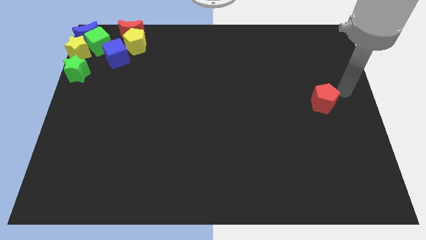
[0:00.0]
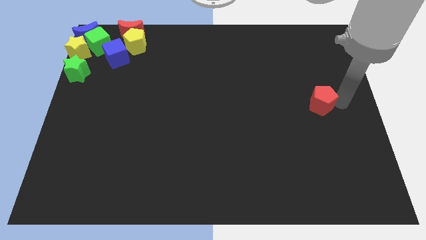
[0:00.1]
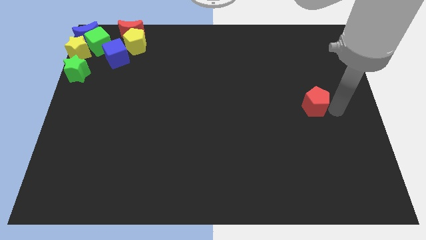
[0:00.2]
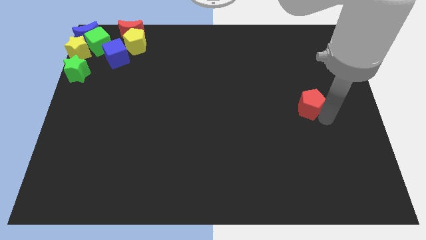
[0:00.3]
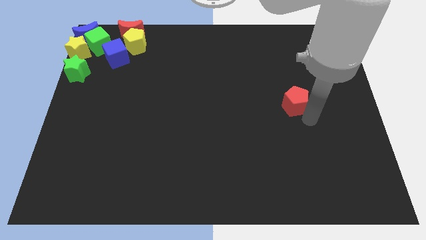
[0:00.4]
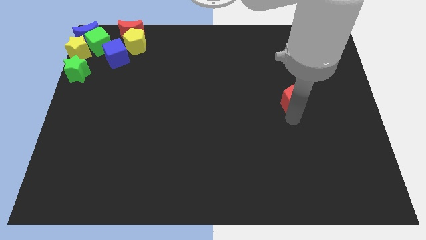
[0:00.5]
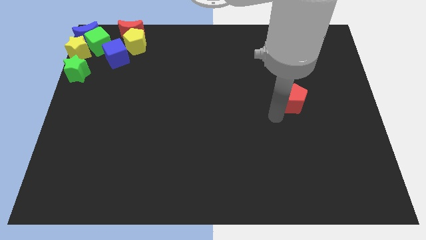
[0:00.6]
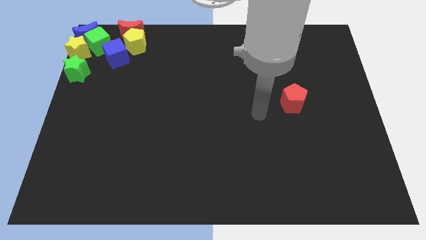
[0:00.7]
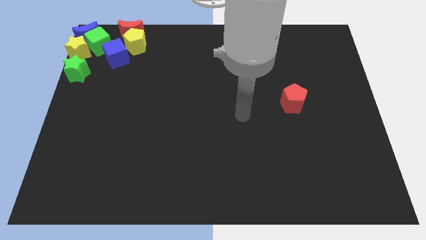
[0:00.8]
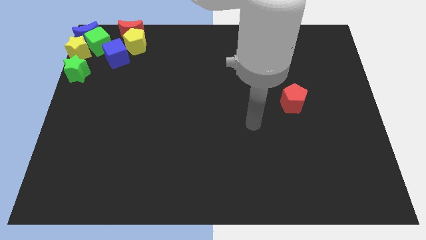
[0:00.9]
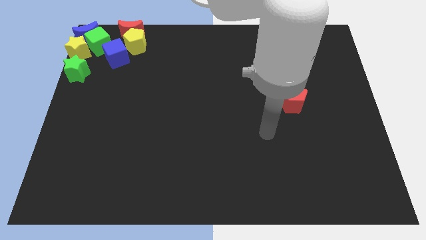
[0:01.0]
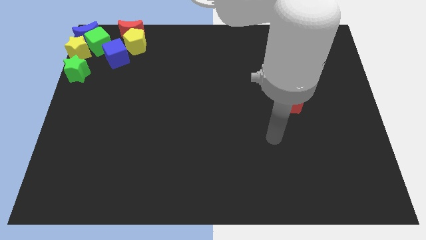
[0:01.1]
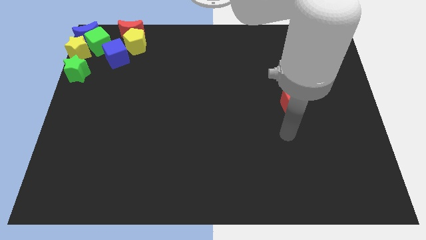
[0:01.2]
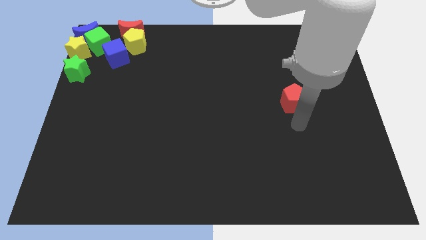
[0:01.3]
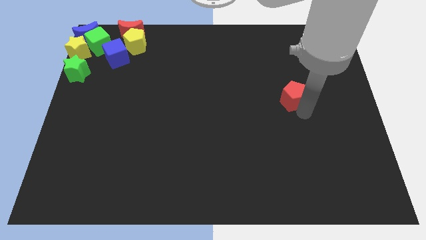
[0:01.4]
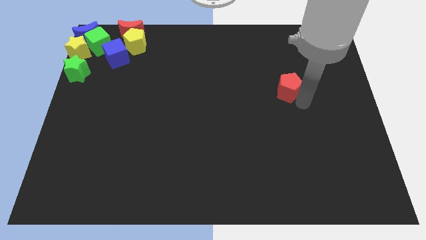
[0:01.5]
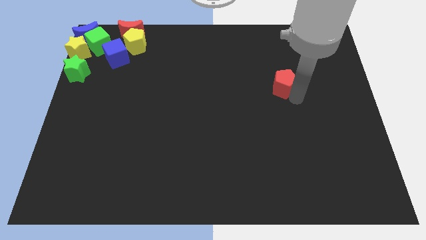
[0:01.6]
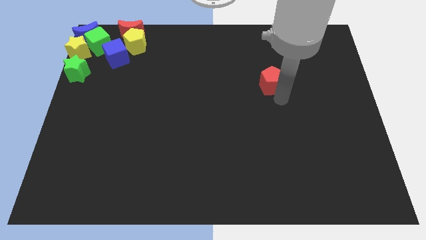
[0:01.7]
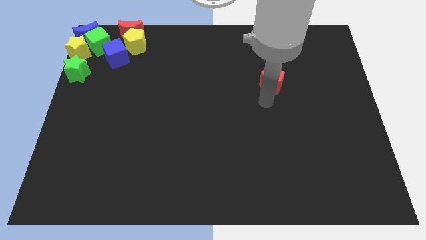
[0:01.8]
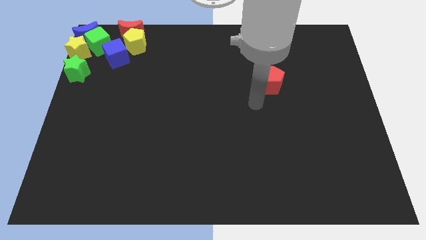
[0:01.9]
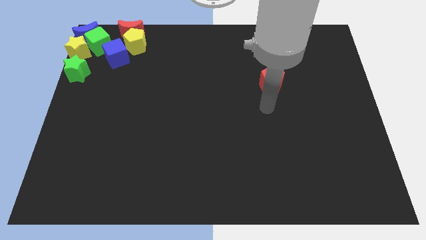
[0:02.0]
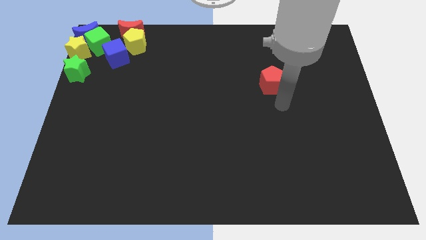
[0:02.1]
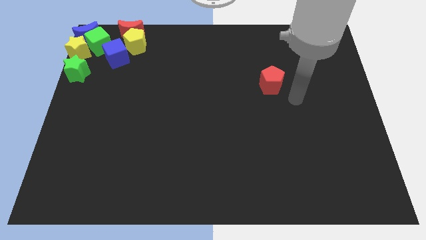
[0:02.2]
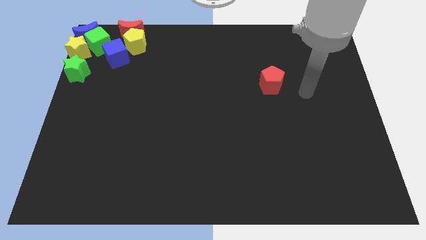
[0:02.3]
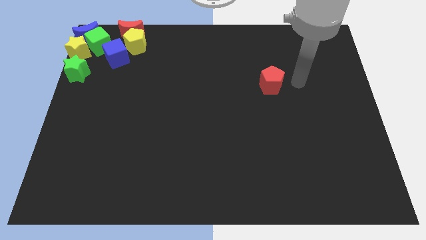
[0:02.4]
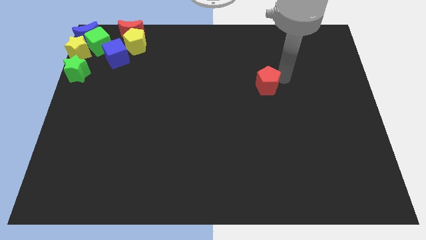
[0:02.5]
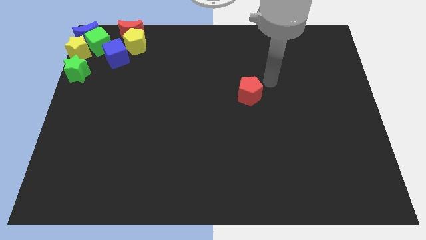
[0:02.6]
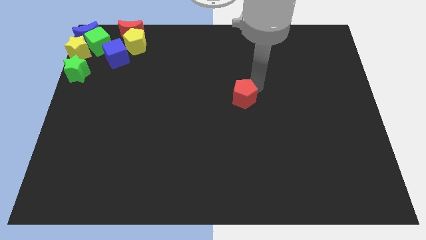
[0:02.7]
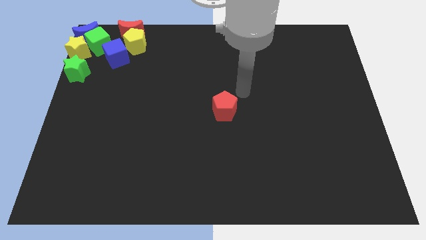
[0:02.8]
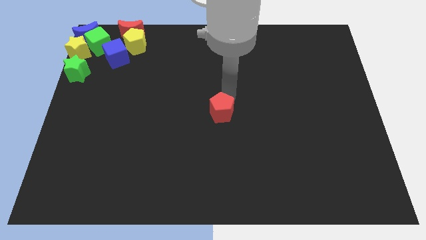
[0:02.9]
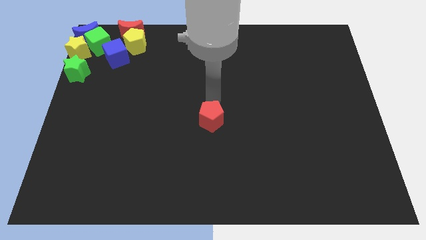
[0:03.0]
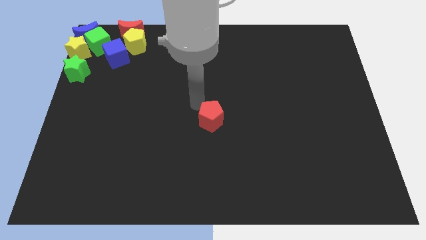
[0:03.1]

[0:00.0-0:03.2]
push the red pentagon to the center of the board

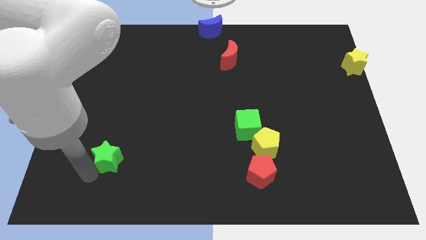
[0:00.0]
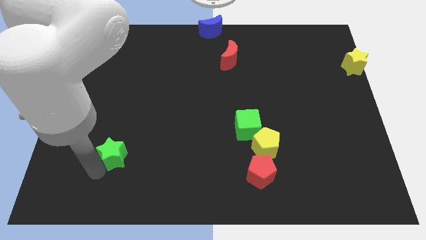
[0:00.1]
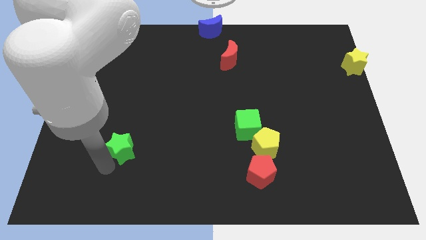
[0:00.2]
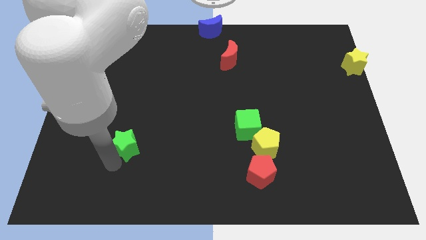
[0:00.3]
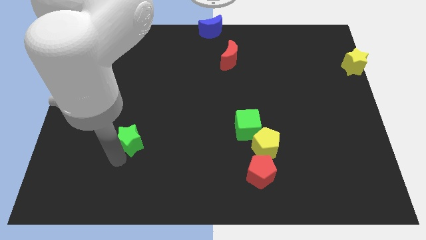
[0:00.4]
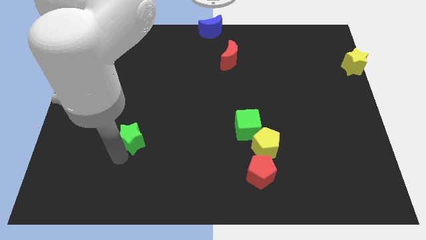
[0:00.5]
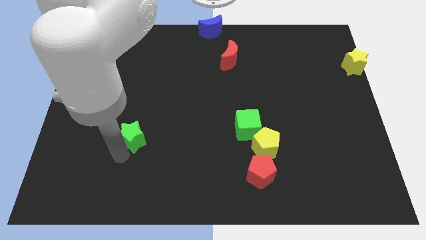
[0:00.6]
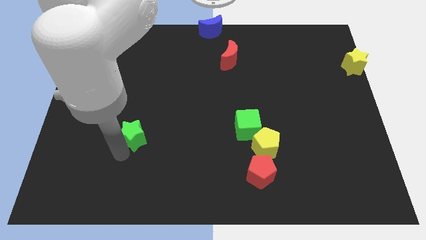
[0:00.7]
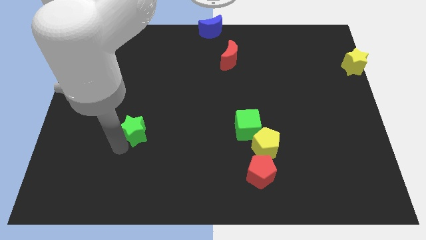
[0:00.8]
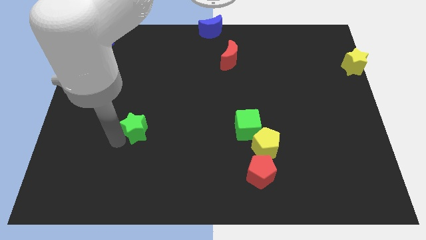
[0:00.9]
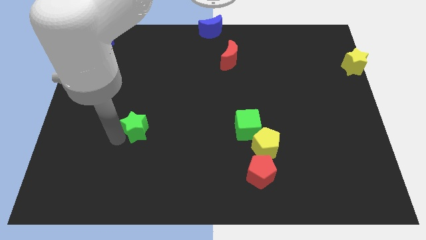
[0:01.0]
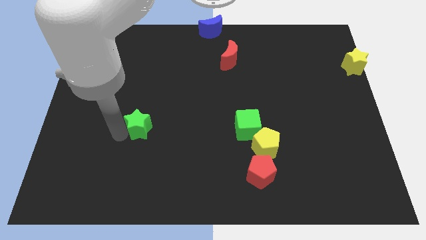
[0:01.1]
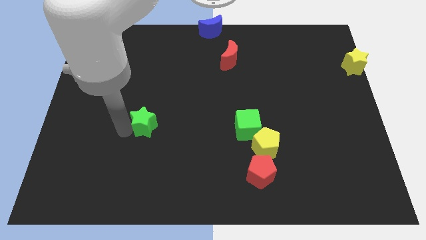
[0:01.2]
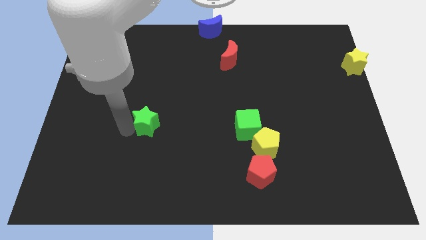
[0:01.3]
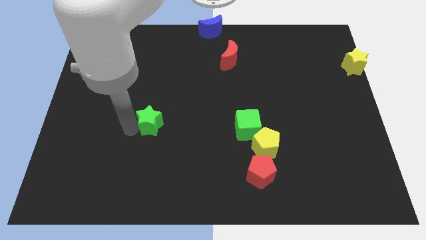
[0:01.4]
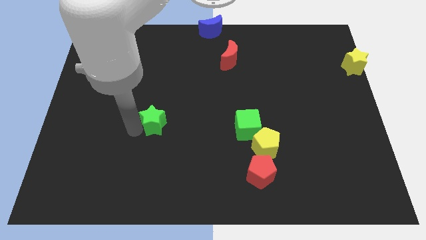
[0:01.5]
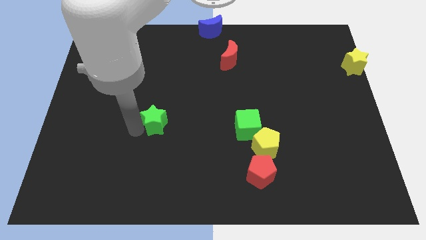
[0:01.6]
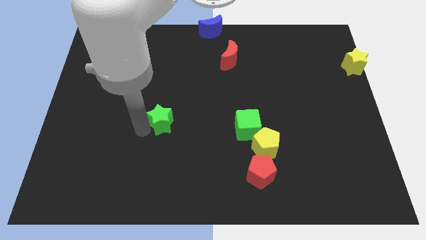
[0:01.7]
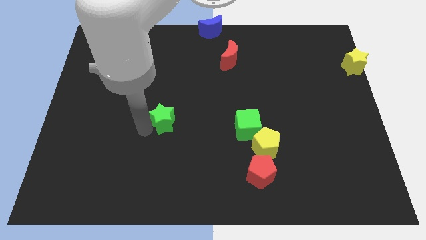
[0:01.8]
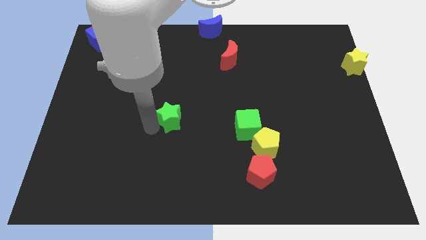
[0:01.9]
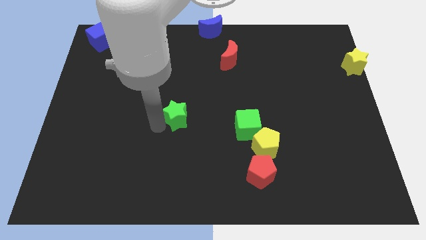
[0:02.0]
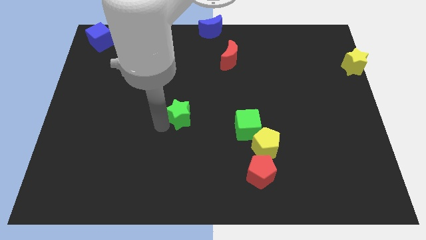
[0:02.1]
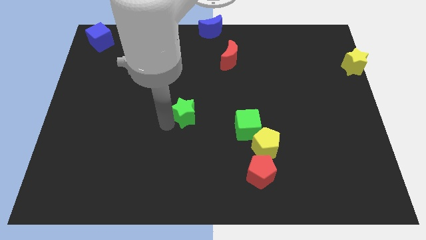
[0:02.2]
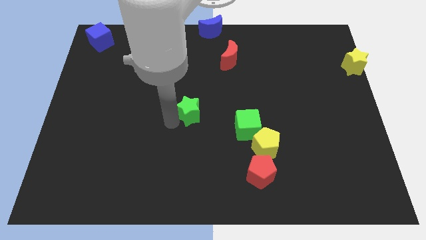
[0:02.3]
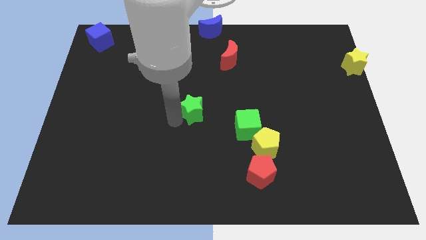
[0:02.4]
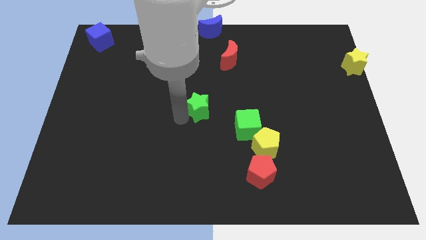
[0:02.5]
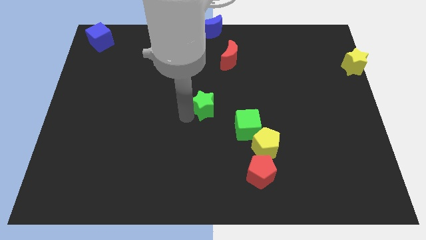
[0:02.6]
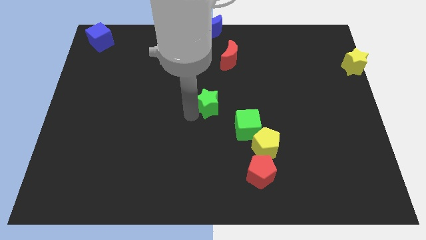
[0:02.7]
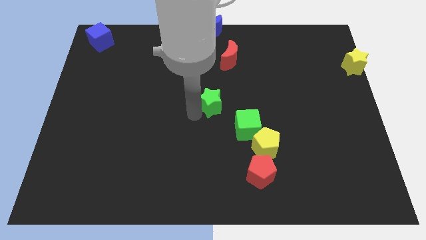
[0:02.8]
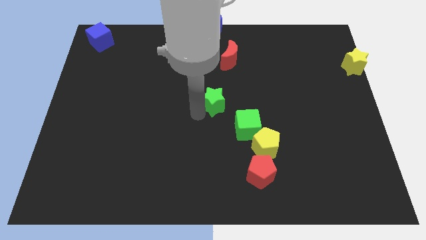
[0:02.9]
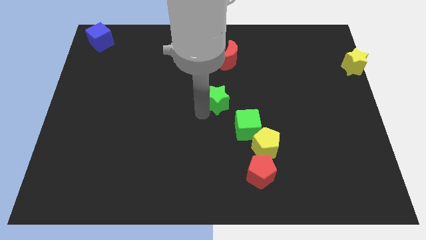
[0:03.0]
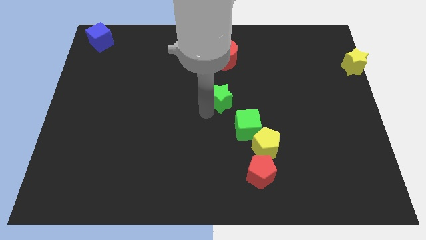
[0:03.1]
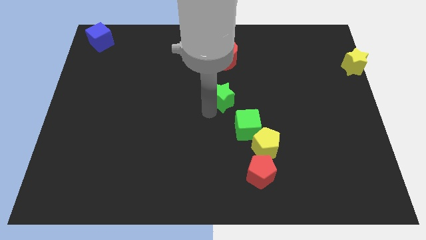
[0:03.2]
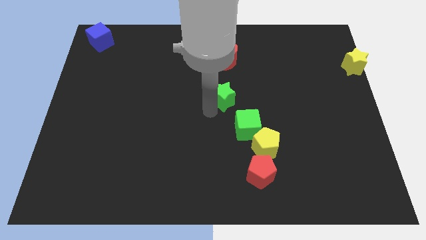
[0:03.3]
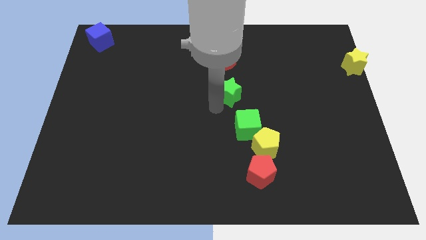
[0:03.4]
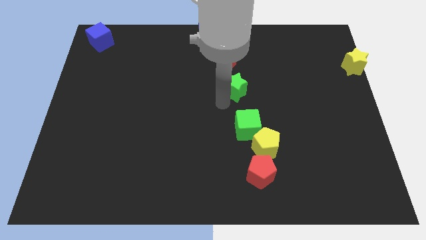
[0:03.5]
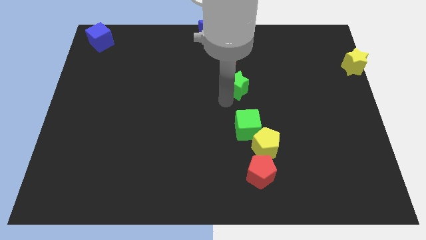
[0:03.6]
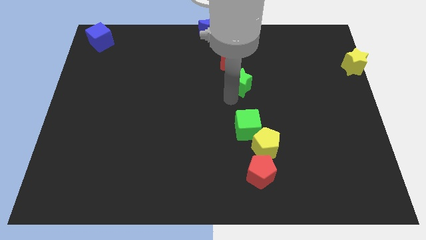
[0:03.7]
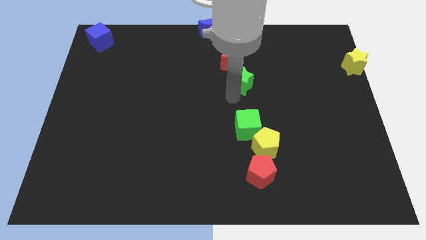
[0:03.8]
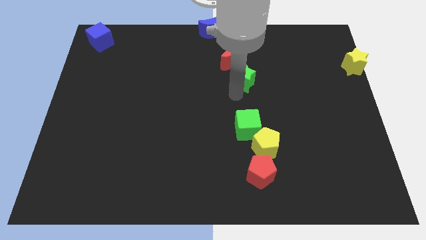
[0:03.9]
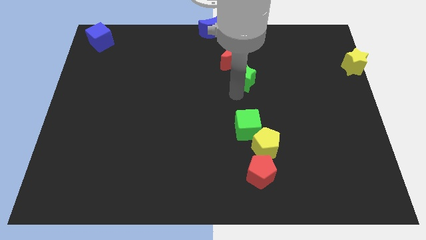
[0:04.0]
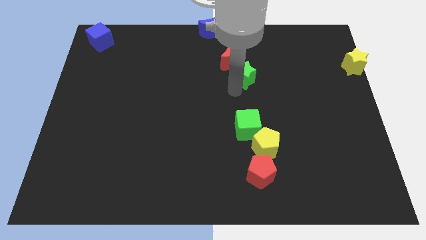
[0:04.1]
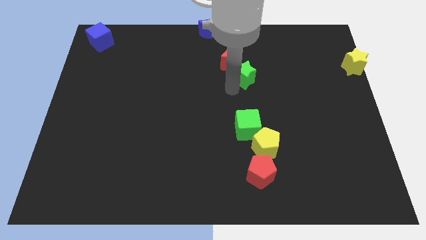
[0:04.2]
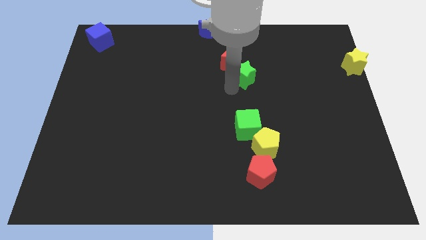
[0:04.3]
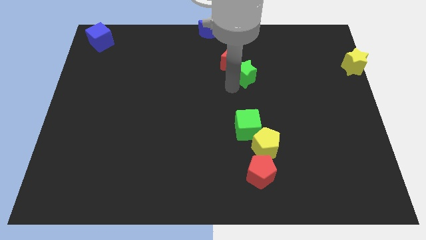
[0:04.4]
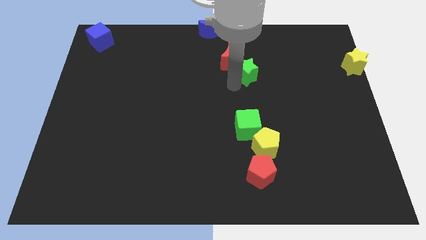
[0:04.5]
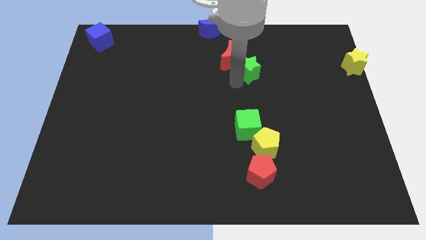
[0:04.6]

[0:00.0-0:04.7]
push the green star

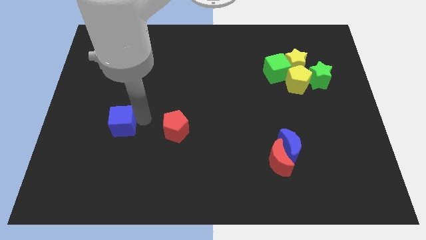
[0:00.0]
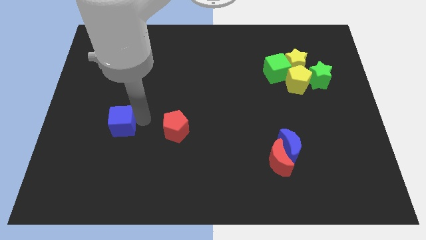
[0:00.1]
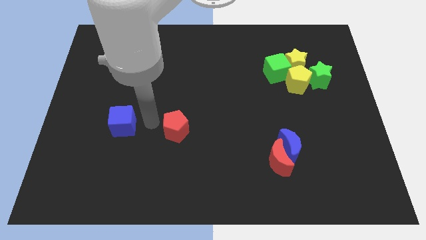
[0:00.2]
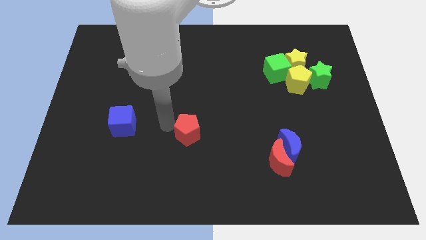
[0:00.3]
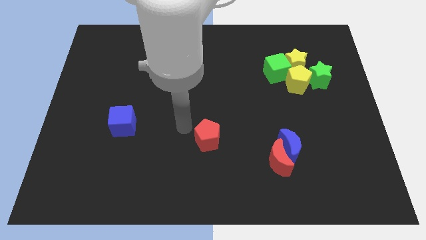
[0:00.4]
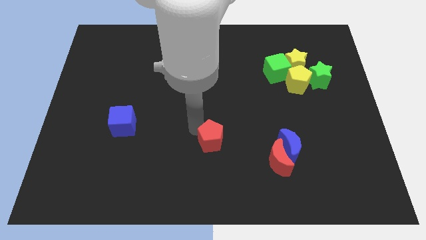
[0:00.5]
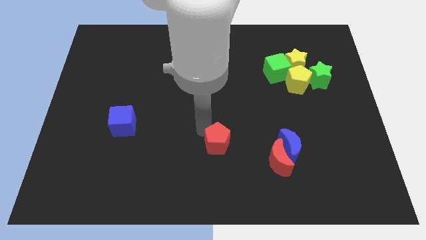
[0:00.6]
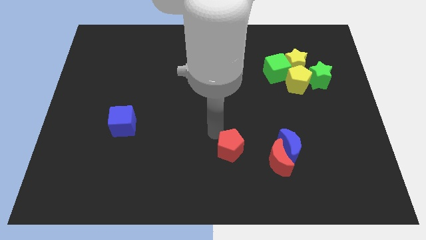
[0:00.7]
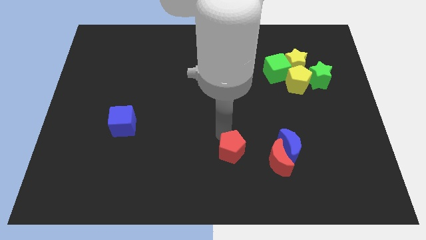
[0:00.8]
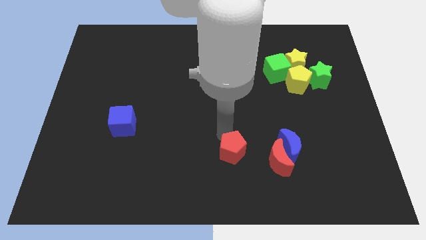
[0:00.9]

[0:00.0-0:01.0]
push the red pentagon towards the left side of the group of crescents
